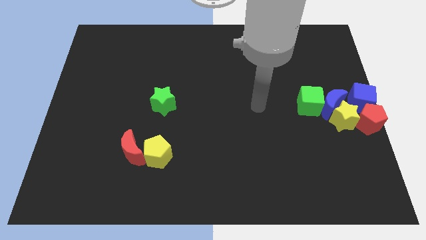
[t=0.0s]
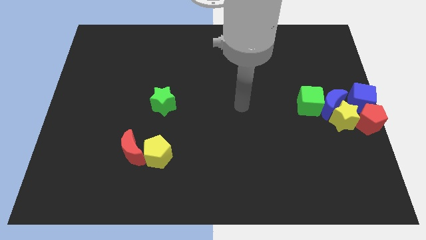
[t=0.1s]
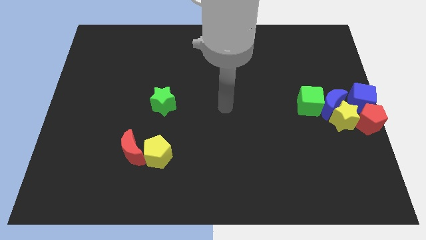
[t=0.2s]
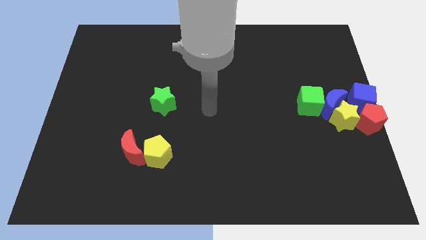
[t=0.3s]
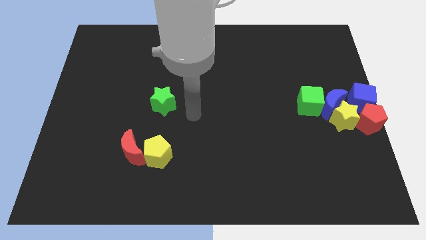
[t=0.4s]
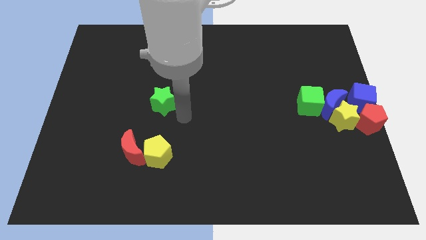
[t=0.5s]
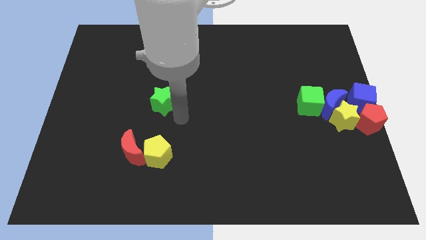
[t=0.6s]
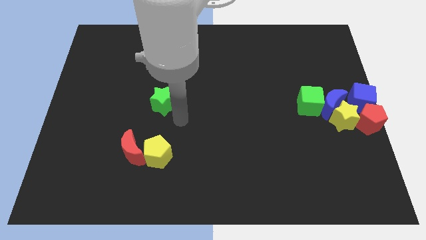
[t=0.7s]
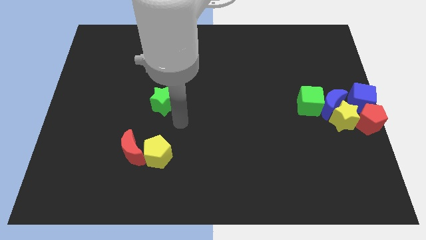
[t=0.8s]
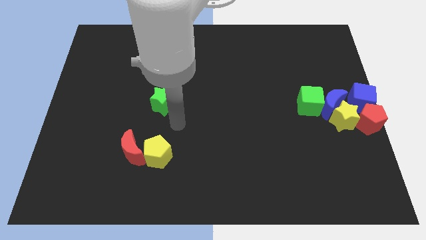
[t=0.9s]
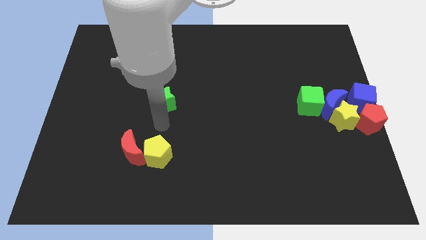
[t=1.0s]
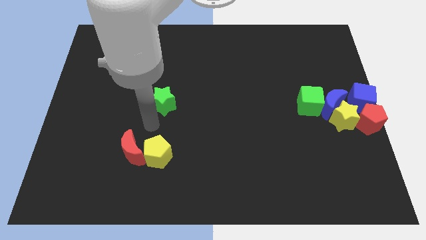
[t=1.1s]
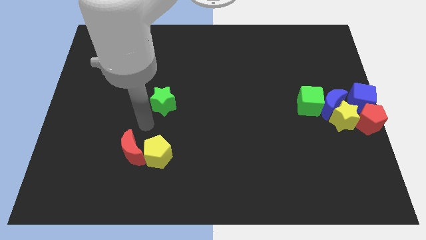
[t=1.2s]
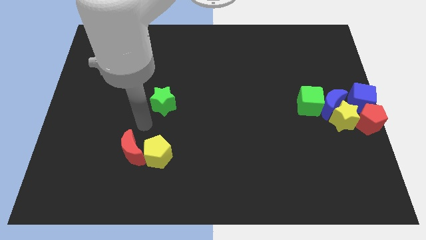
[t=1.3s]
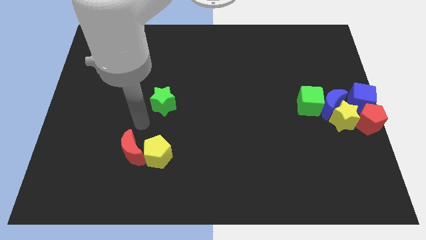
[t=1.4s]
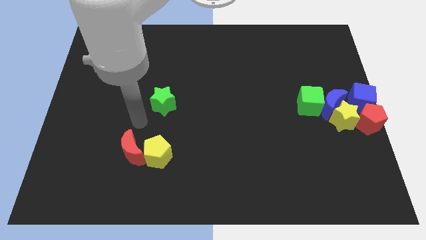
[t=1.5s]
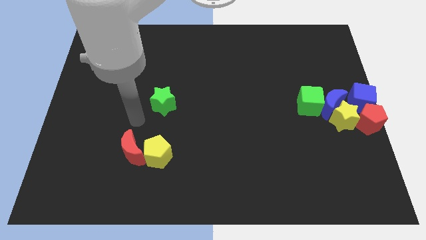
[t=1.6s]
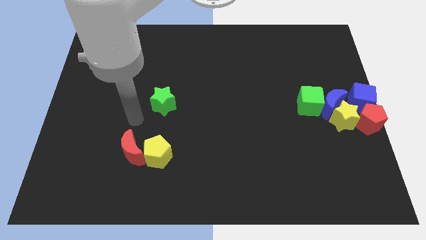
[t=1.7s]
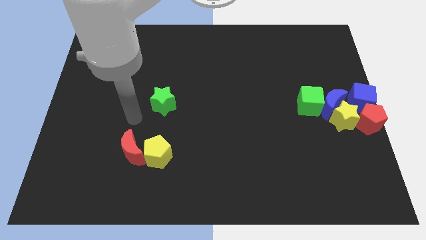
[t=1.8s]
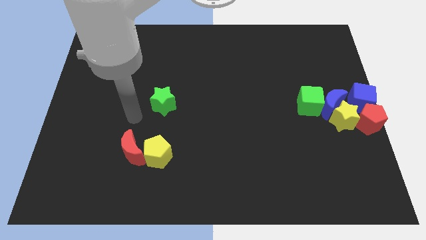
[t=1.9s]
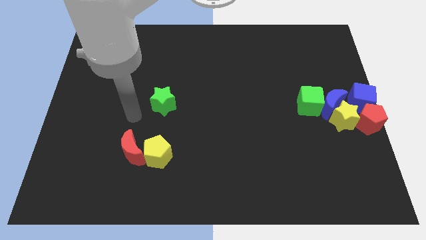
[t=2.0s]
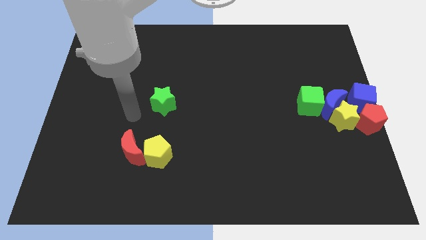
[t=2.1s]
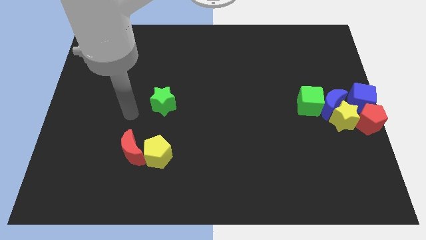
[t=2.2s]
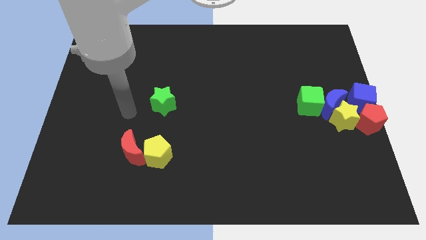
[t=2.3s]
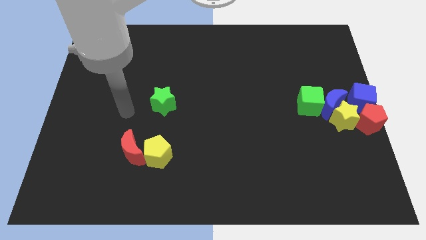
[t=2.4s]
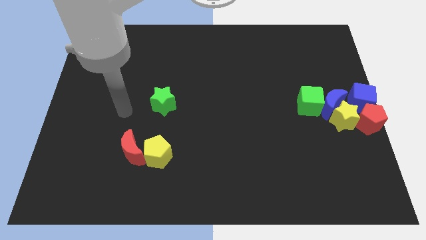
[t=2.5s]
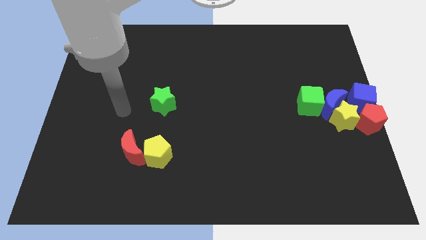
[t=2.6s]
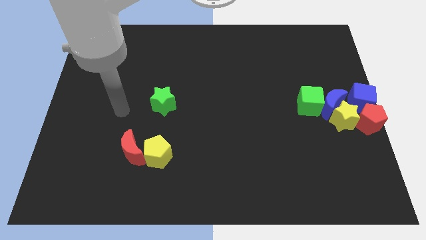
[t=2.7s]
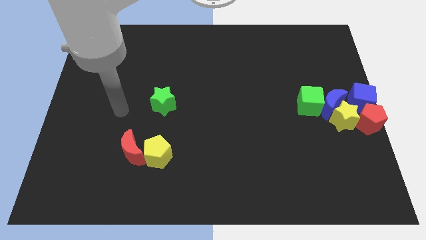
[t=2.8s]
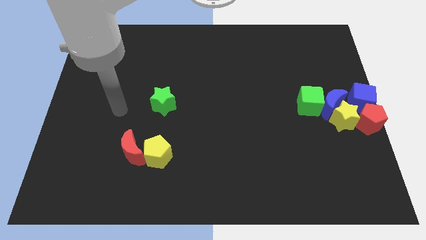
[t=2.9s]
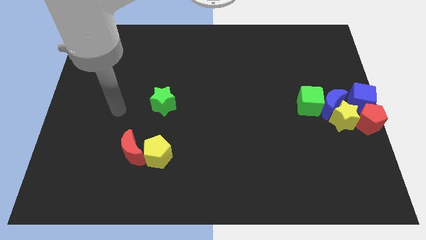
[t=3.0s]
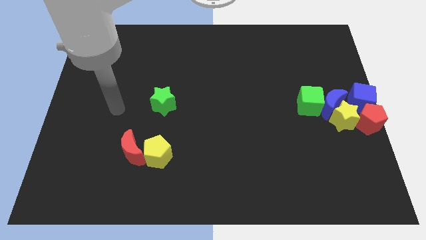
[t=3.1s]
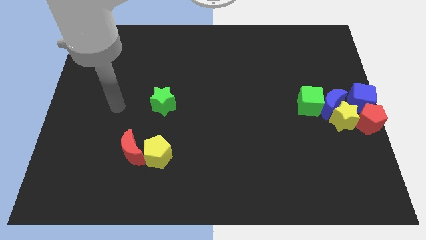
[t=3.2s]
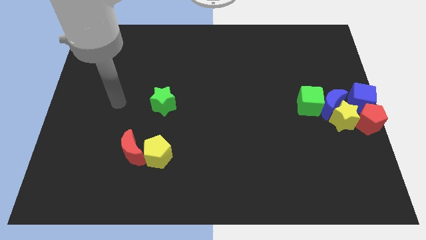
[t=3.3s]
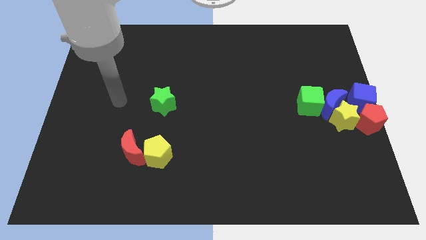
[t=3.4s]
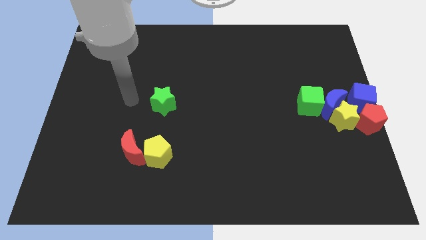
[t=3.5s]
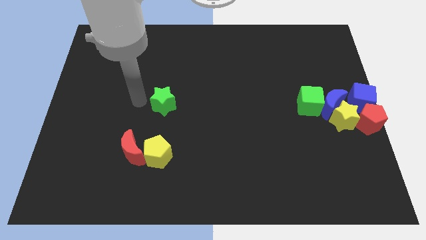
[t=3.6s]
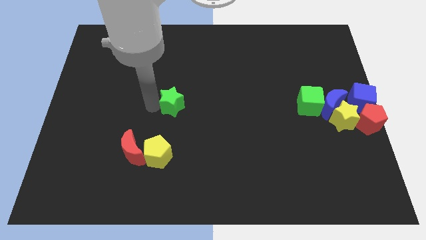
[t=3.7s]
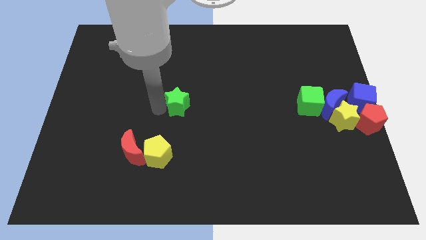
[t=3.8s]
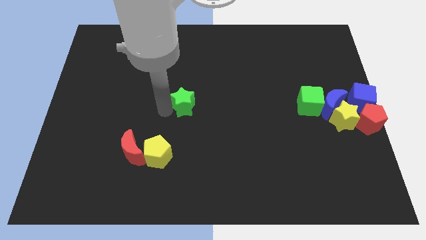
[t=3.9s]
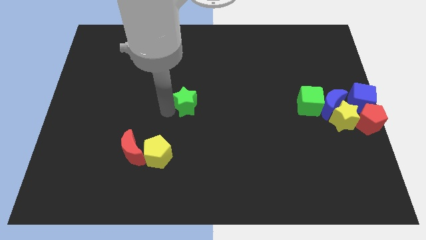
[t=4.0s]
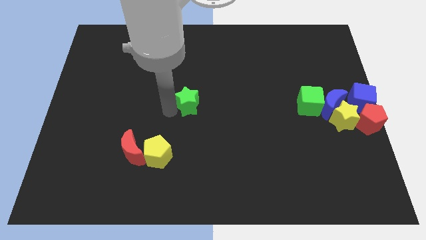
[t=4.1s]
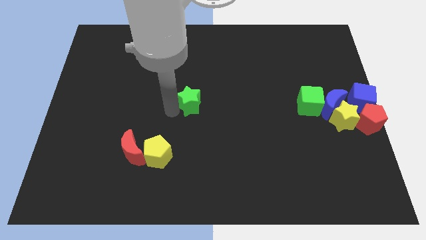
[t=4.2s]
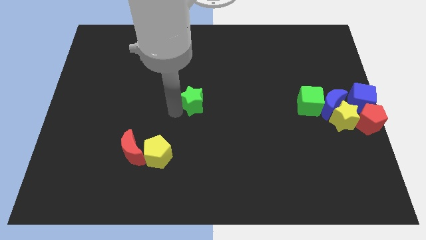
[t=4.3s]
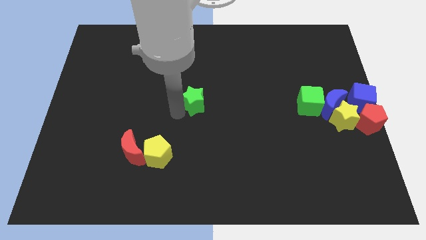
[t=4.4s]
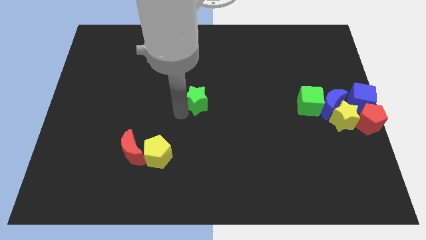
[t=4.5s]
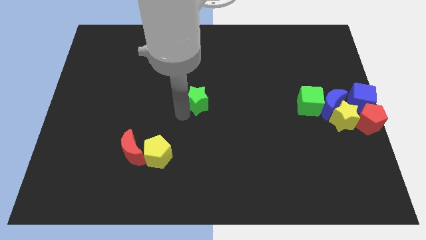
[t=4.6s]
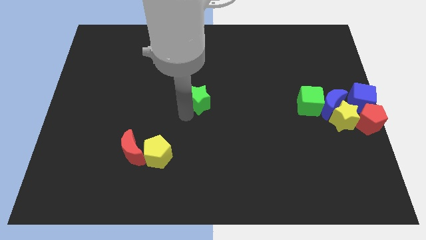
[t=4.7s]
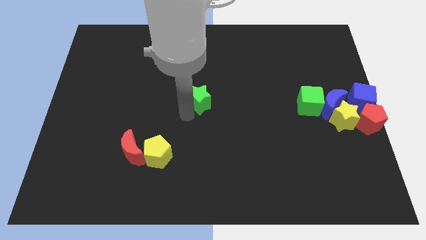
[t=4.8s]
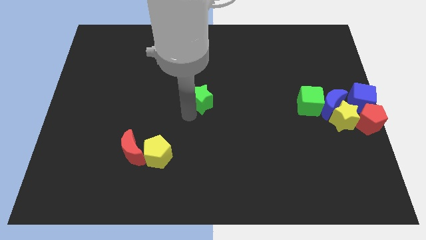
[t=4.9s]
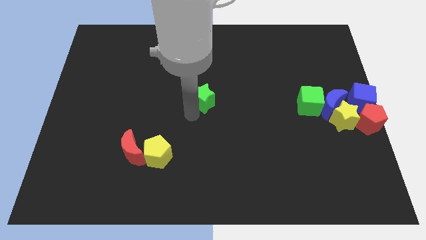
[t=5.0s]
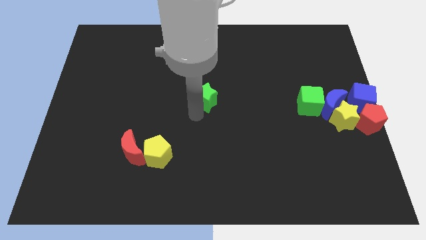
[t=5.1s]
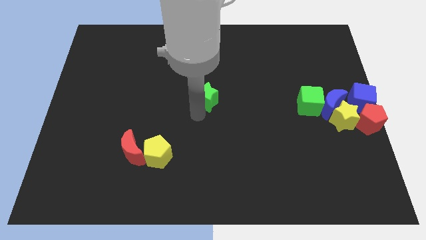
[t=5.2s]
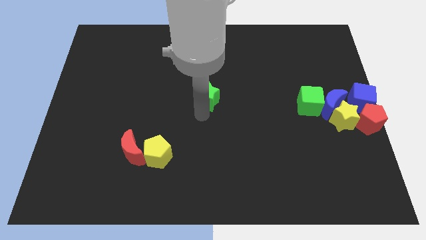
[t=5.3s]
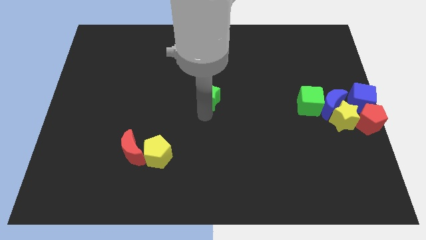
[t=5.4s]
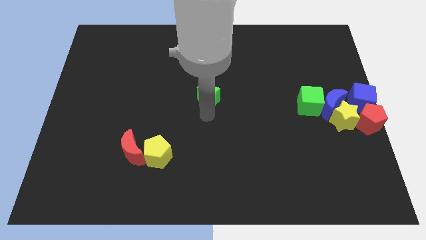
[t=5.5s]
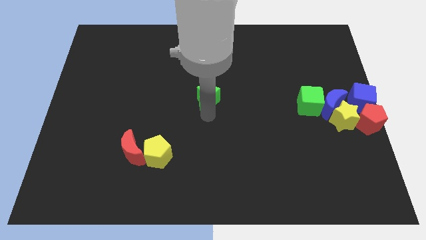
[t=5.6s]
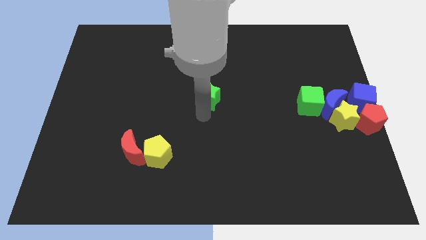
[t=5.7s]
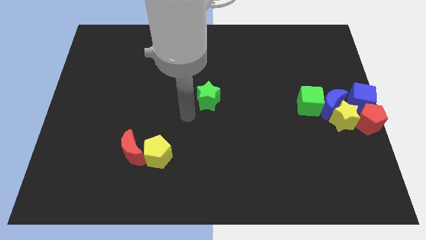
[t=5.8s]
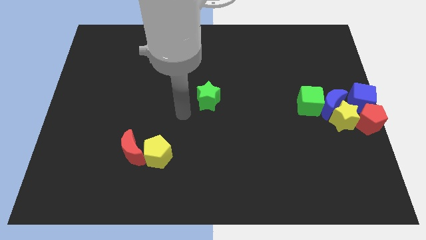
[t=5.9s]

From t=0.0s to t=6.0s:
slide the green star to the center of the board

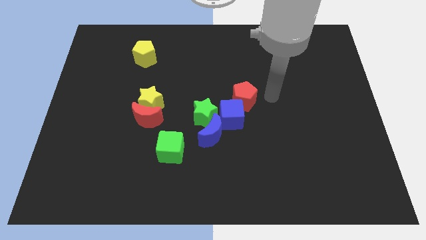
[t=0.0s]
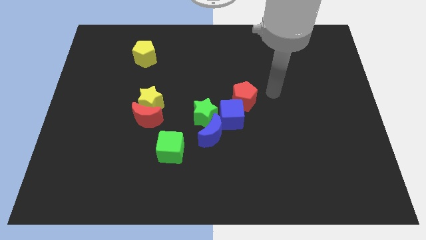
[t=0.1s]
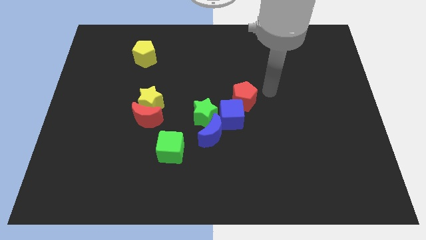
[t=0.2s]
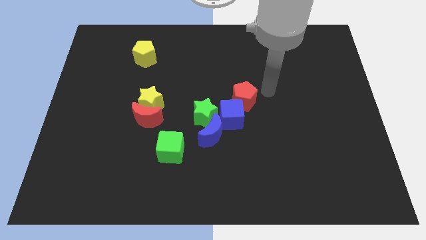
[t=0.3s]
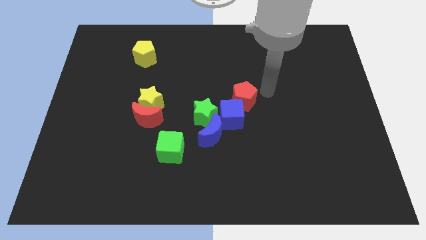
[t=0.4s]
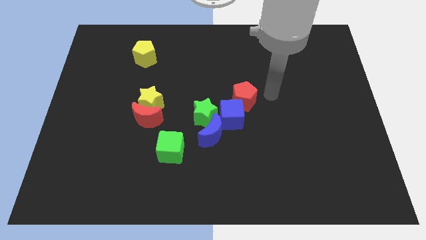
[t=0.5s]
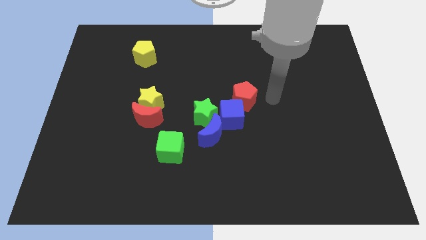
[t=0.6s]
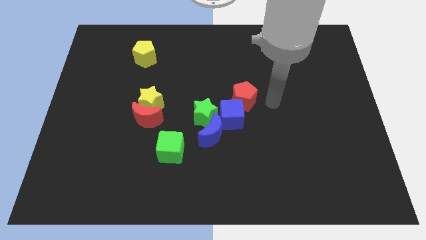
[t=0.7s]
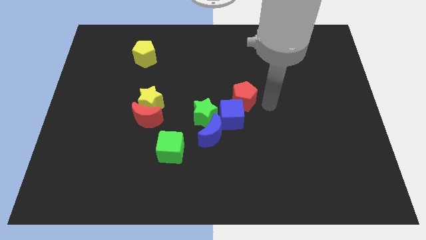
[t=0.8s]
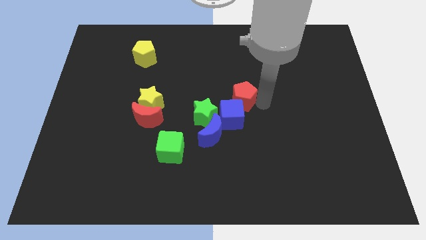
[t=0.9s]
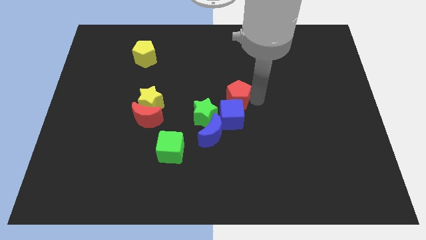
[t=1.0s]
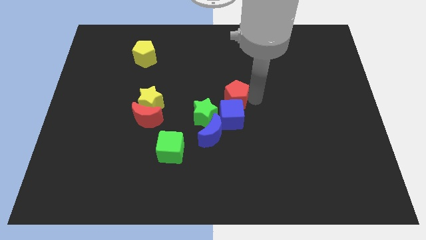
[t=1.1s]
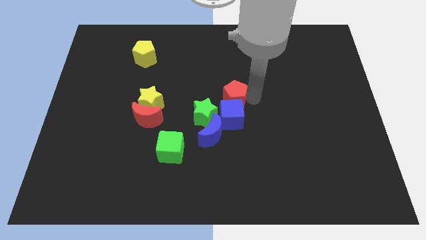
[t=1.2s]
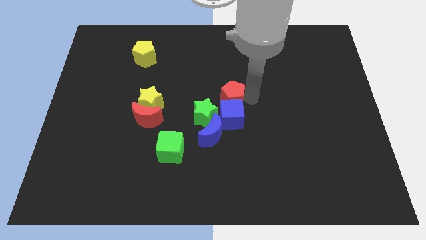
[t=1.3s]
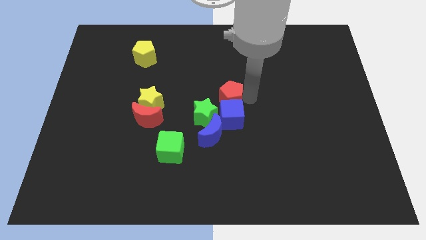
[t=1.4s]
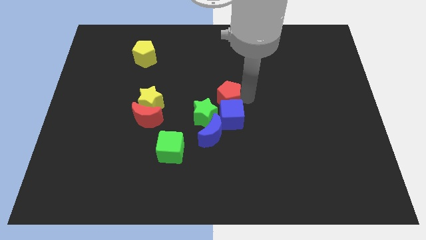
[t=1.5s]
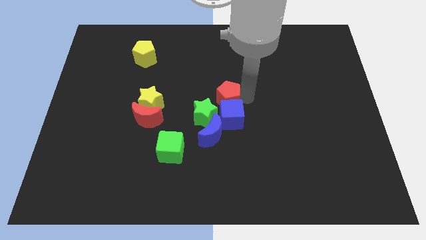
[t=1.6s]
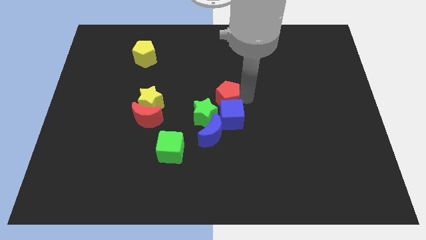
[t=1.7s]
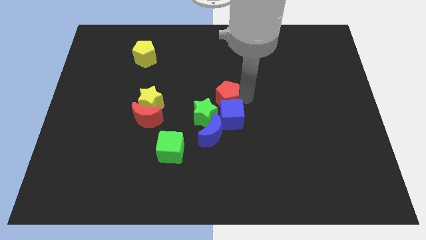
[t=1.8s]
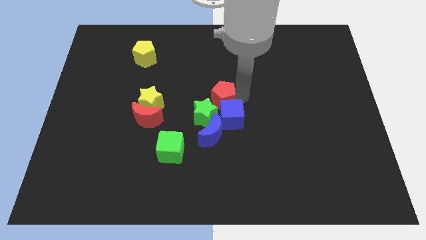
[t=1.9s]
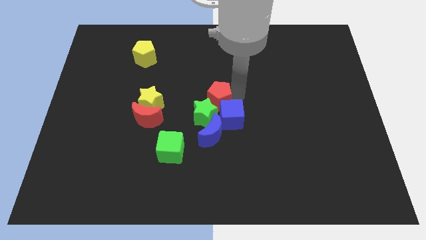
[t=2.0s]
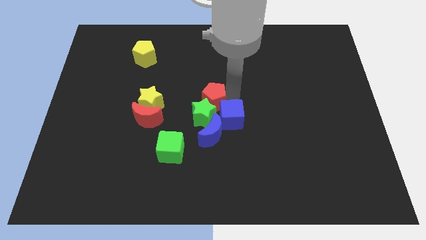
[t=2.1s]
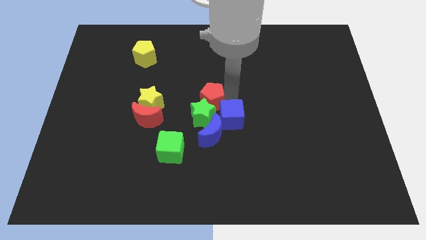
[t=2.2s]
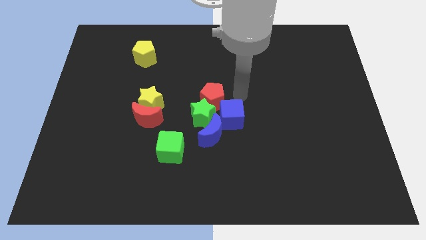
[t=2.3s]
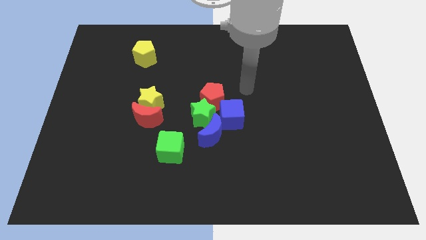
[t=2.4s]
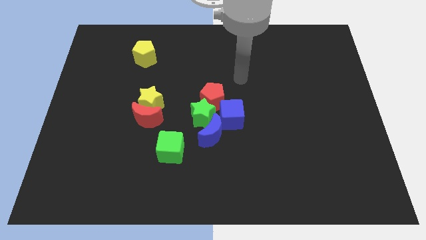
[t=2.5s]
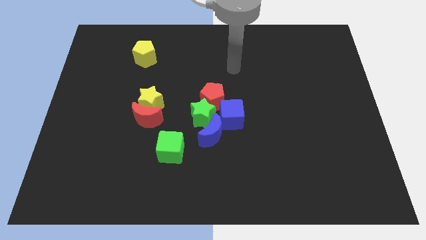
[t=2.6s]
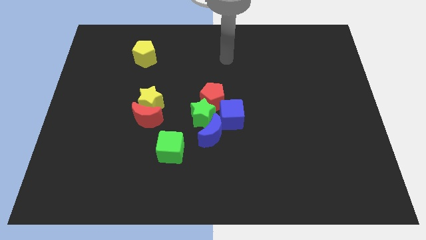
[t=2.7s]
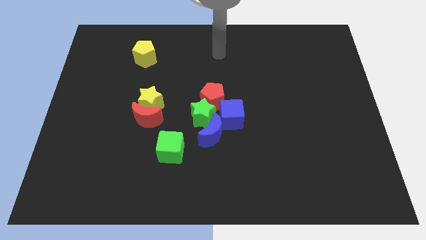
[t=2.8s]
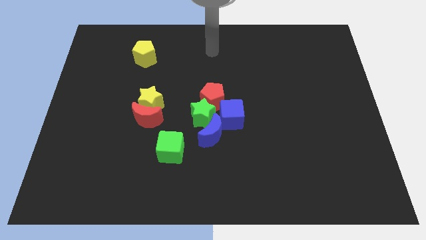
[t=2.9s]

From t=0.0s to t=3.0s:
push the red pentagon above the green star
